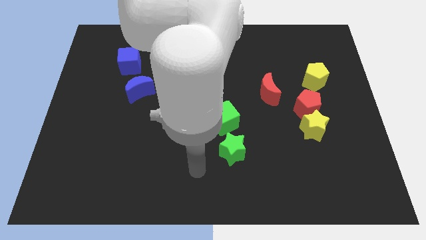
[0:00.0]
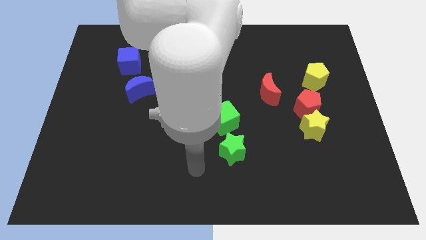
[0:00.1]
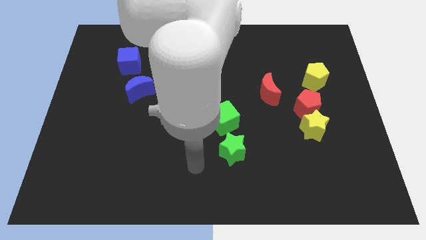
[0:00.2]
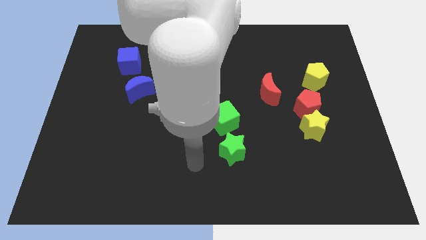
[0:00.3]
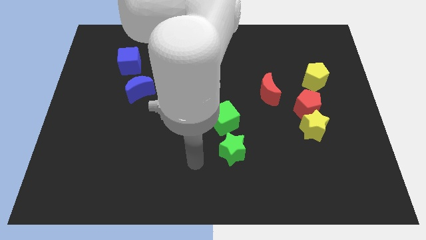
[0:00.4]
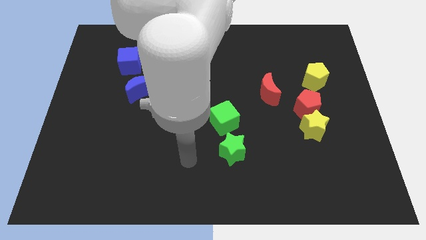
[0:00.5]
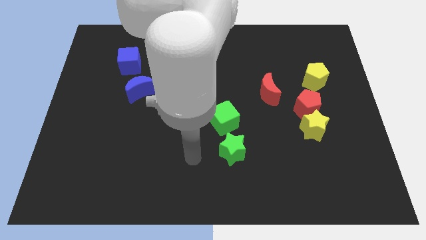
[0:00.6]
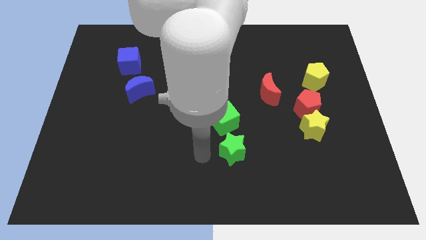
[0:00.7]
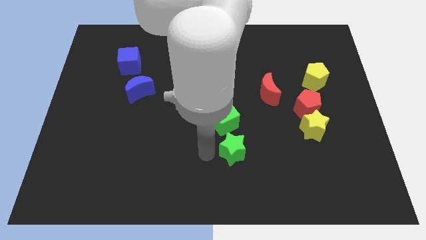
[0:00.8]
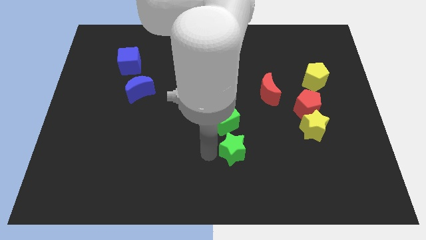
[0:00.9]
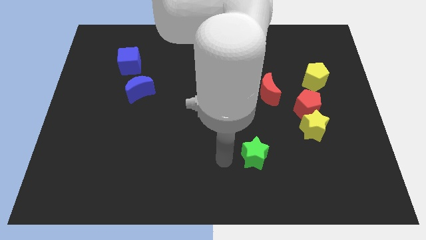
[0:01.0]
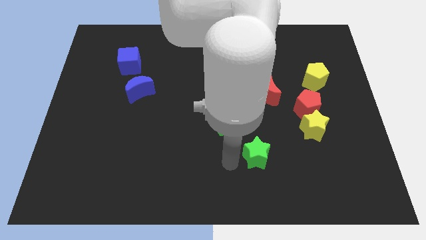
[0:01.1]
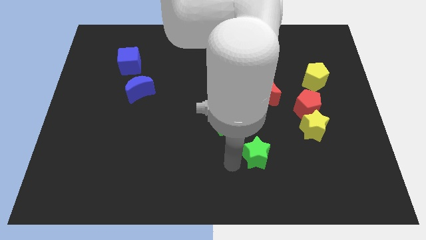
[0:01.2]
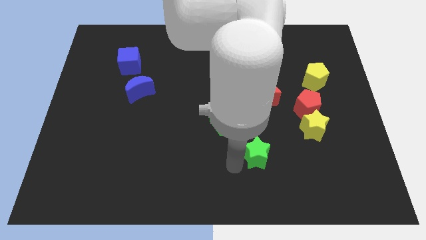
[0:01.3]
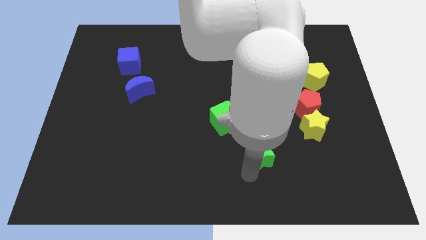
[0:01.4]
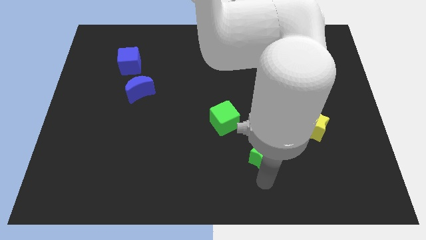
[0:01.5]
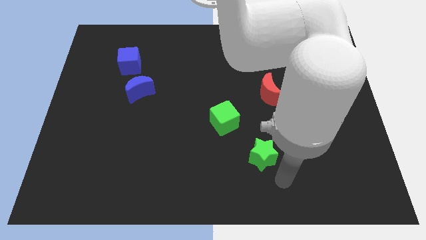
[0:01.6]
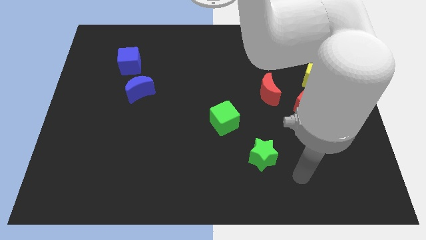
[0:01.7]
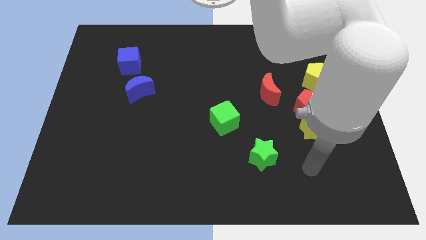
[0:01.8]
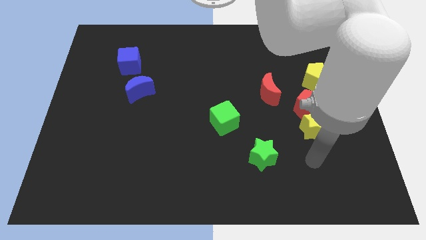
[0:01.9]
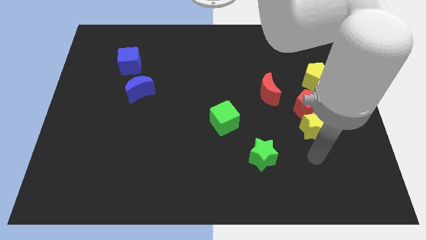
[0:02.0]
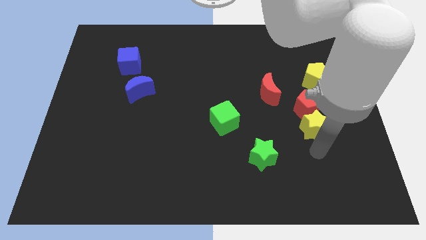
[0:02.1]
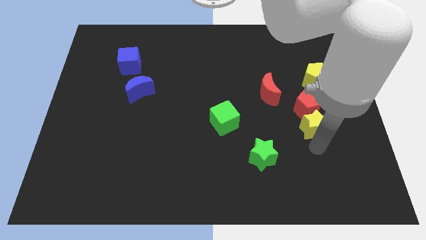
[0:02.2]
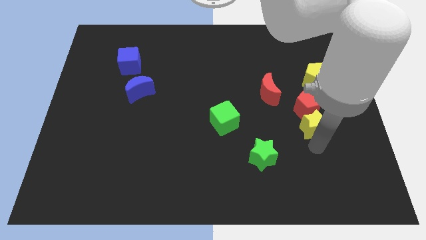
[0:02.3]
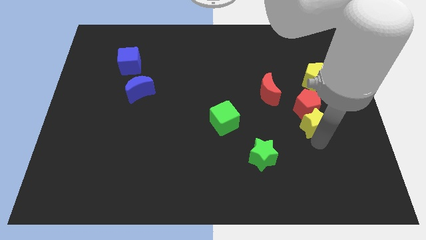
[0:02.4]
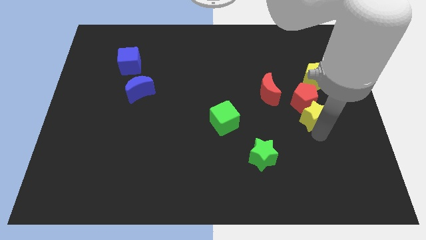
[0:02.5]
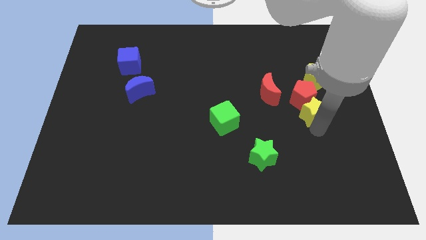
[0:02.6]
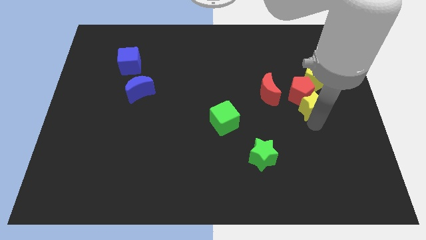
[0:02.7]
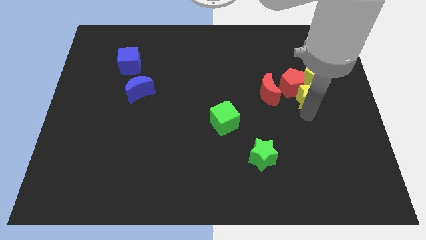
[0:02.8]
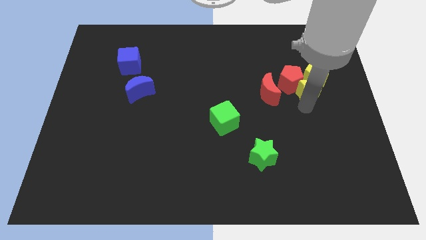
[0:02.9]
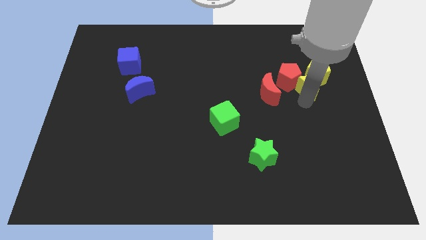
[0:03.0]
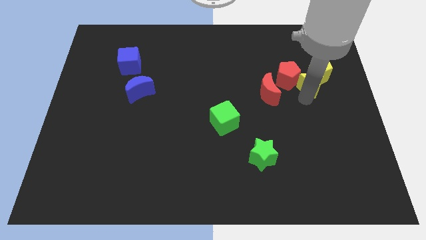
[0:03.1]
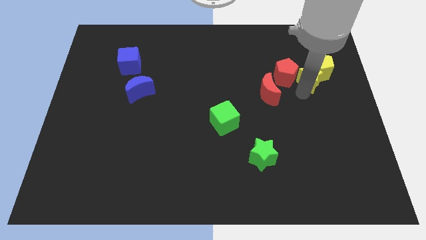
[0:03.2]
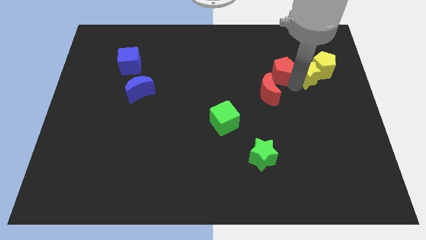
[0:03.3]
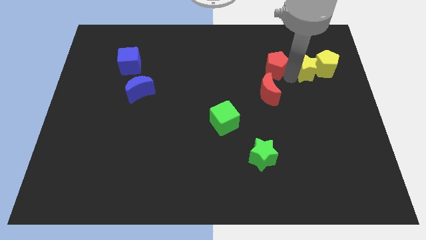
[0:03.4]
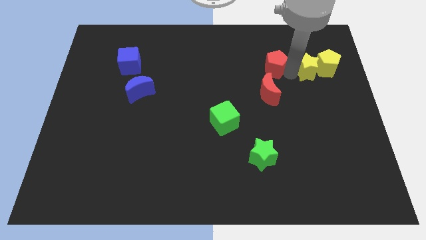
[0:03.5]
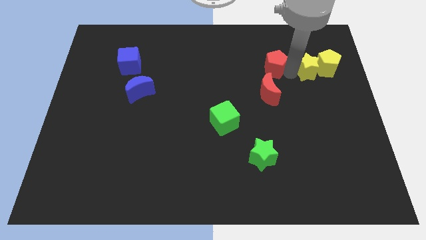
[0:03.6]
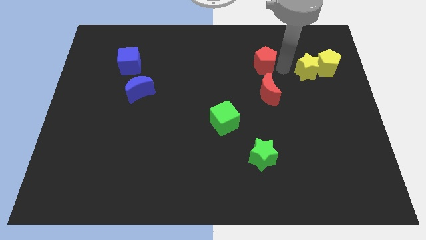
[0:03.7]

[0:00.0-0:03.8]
move the red pentagon and green star diagonal to the red crescent

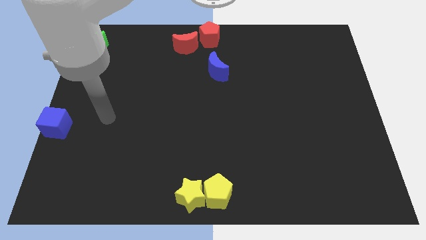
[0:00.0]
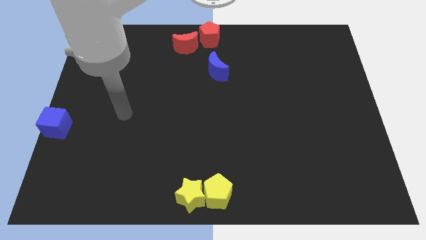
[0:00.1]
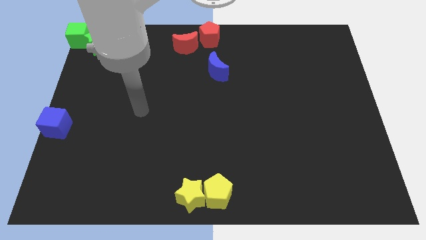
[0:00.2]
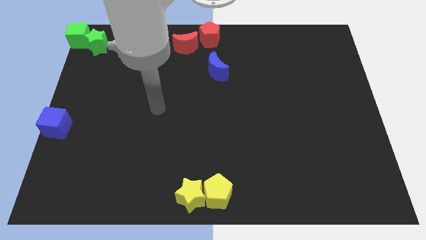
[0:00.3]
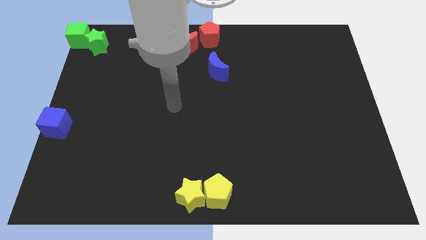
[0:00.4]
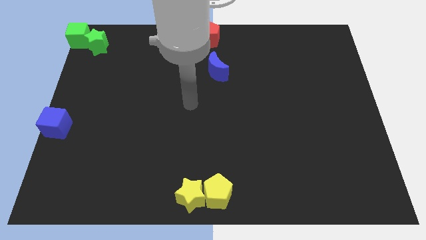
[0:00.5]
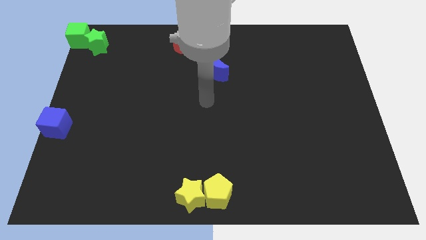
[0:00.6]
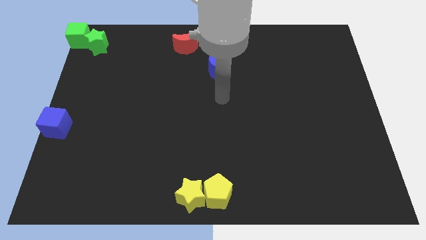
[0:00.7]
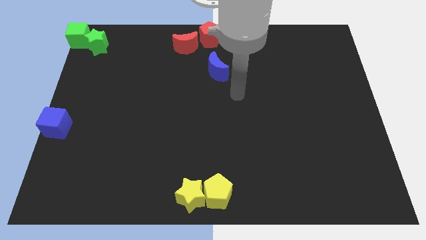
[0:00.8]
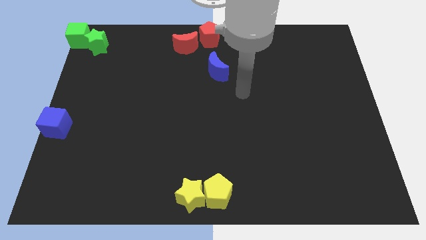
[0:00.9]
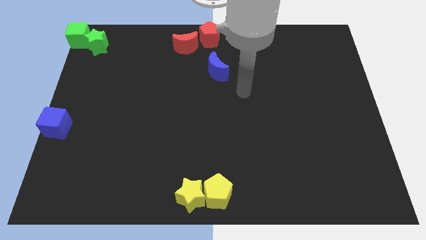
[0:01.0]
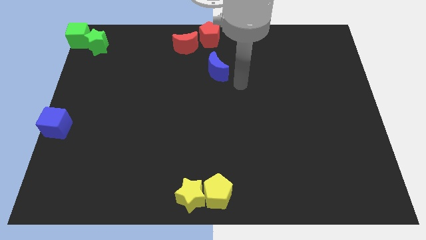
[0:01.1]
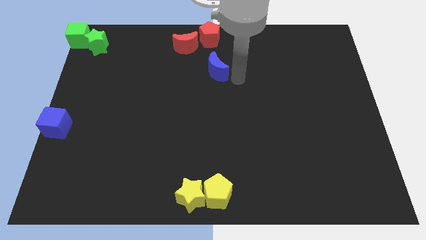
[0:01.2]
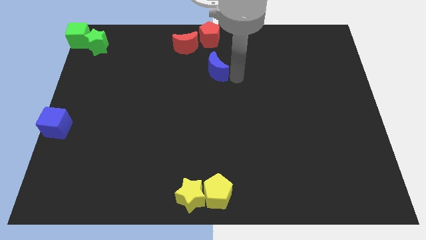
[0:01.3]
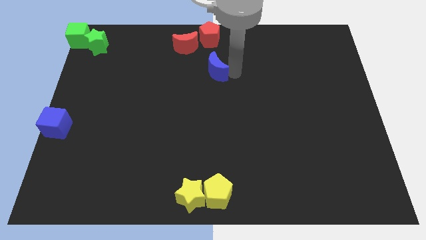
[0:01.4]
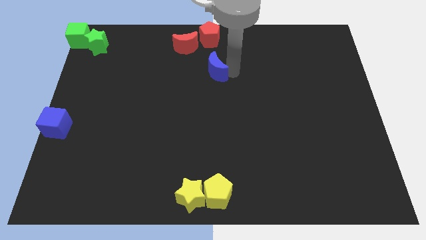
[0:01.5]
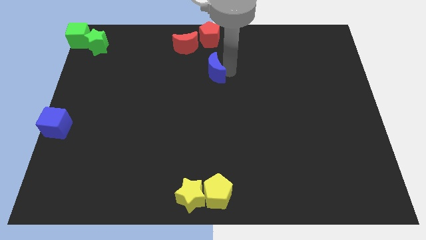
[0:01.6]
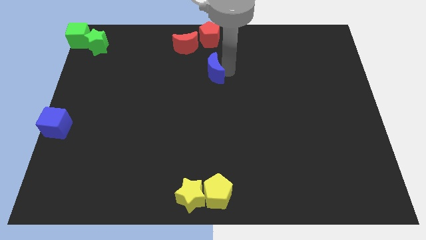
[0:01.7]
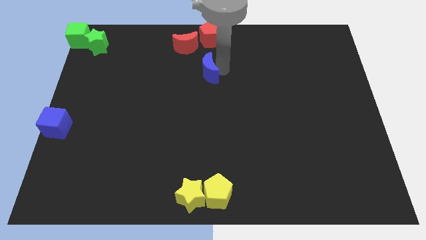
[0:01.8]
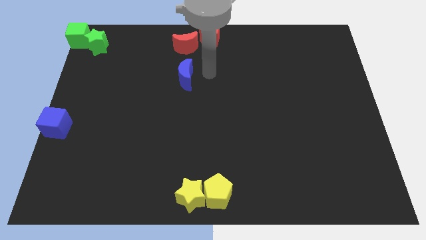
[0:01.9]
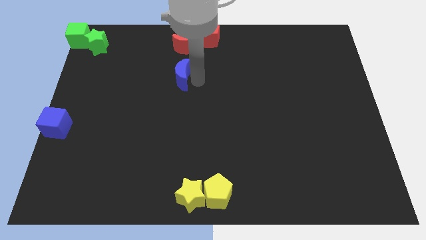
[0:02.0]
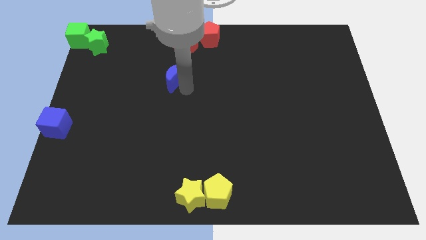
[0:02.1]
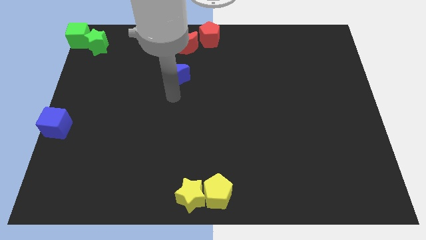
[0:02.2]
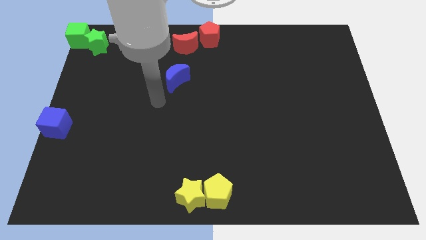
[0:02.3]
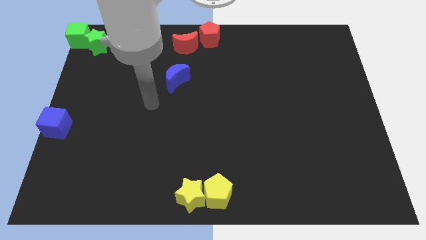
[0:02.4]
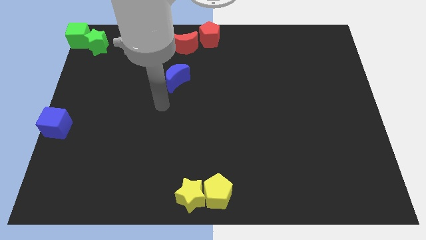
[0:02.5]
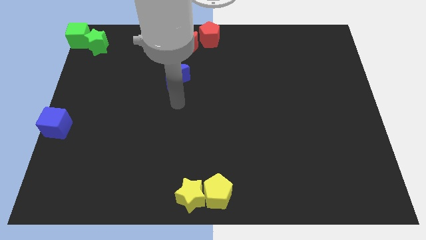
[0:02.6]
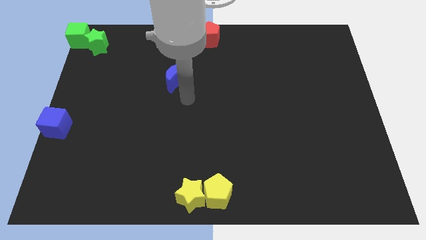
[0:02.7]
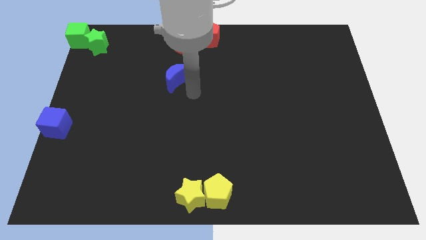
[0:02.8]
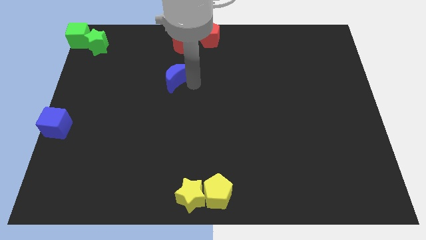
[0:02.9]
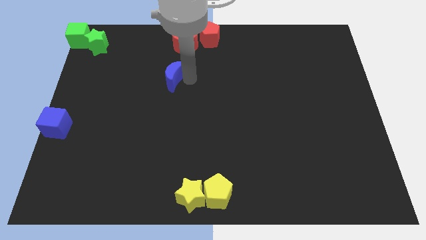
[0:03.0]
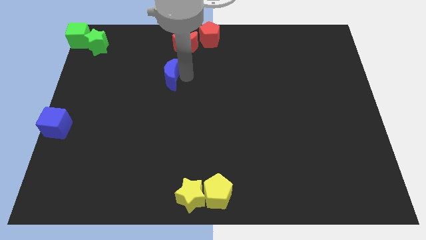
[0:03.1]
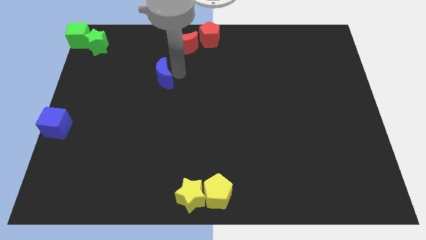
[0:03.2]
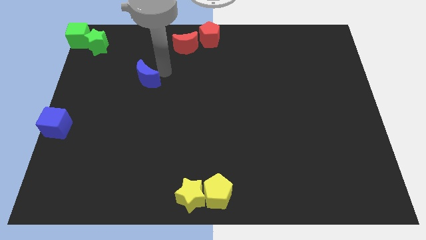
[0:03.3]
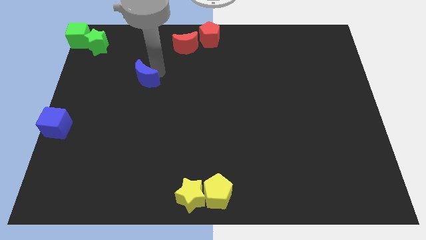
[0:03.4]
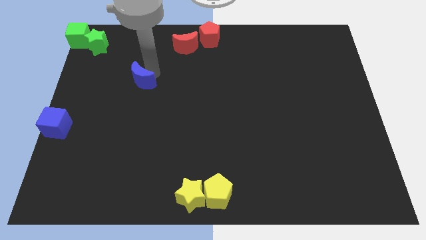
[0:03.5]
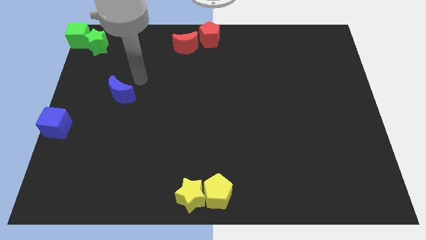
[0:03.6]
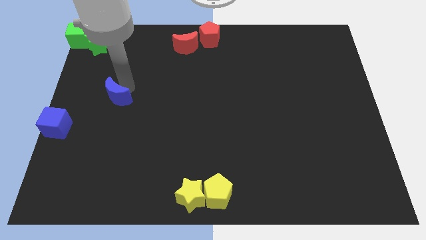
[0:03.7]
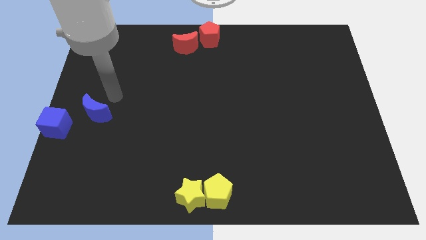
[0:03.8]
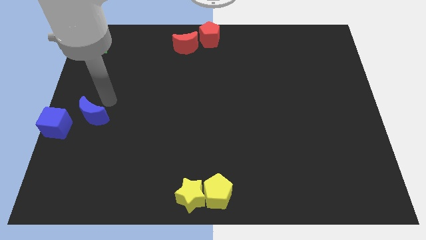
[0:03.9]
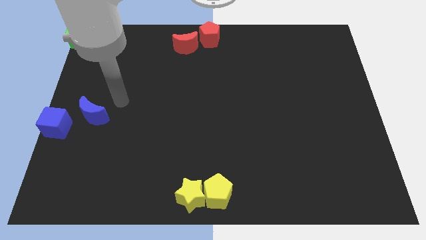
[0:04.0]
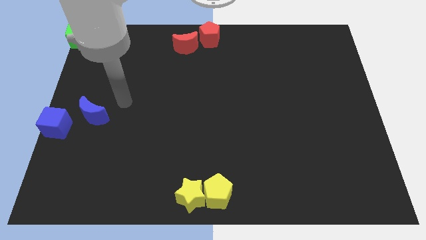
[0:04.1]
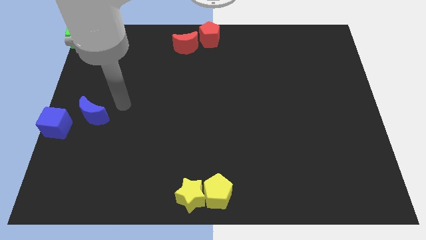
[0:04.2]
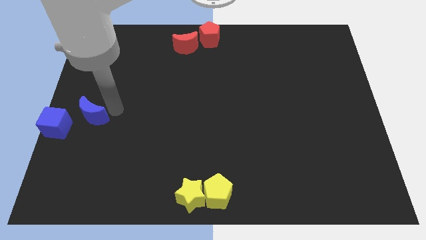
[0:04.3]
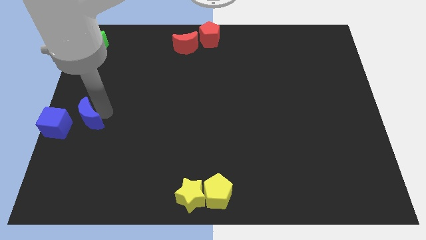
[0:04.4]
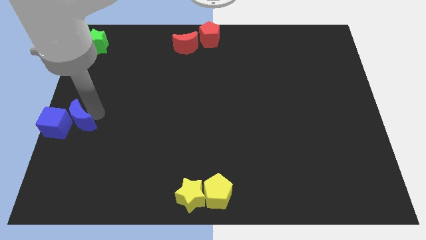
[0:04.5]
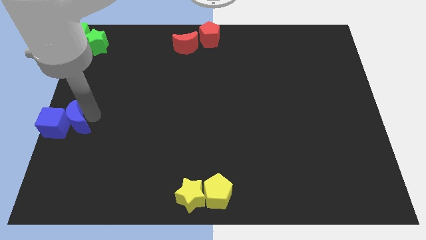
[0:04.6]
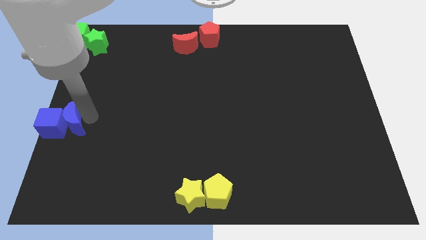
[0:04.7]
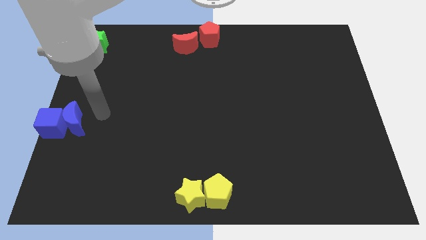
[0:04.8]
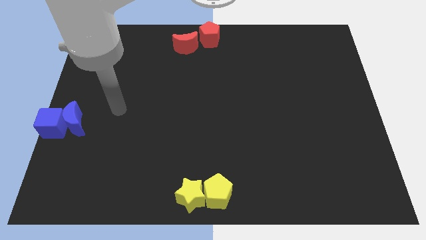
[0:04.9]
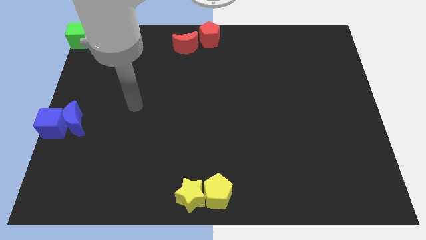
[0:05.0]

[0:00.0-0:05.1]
push the blue moon into the blue cube
